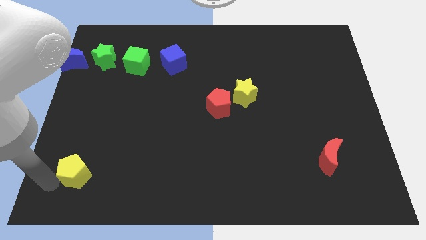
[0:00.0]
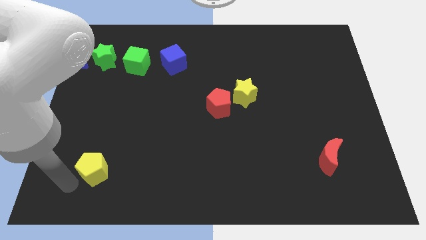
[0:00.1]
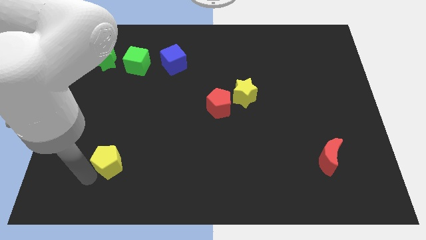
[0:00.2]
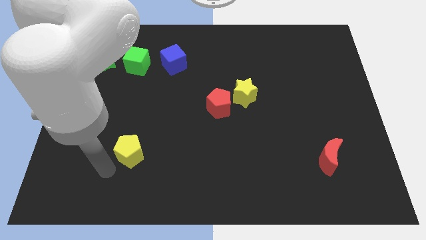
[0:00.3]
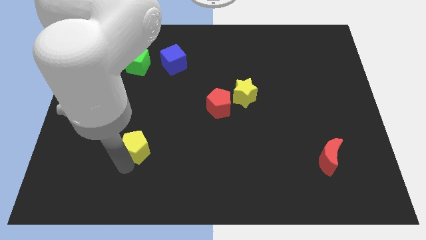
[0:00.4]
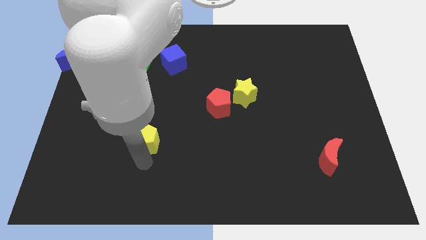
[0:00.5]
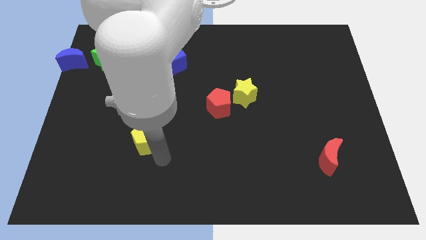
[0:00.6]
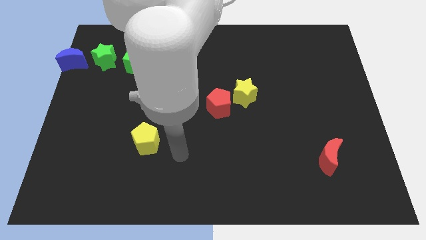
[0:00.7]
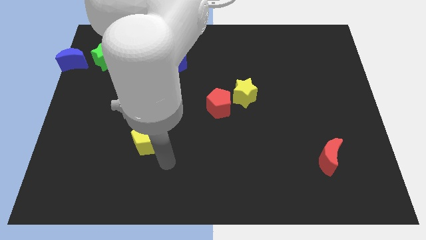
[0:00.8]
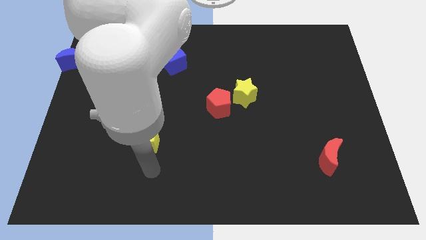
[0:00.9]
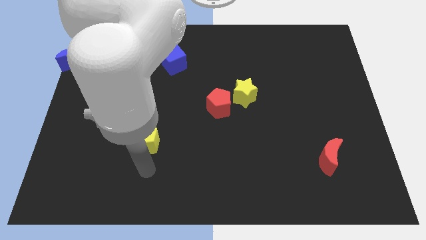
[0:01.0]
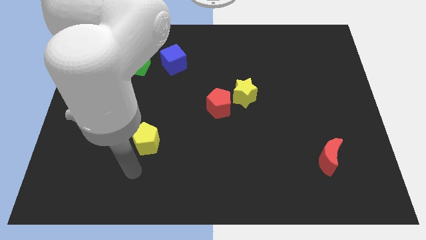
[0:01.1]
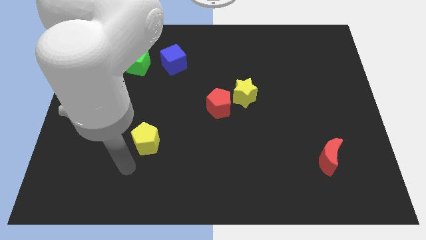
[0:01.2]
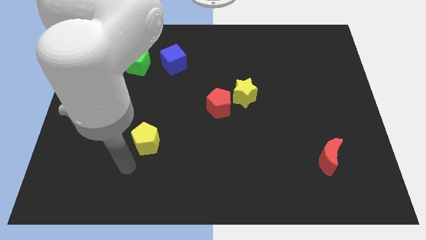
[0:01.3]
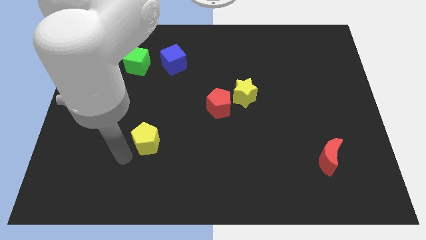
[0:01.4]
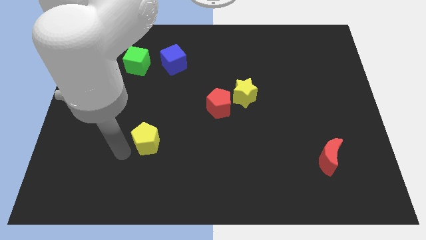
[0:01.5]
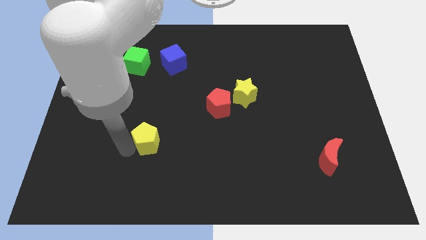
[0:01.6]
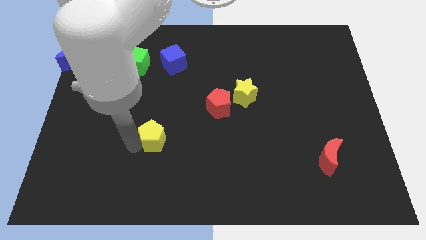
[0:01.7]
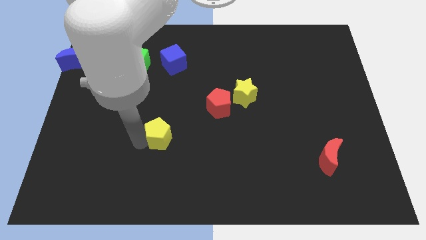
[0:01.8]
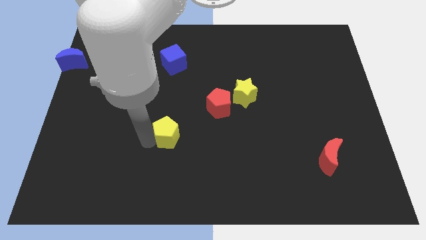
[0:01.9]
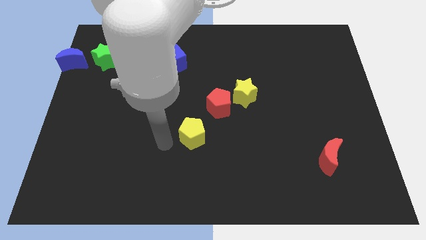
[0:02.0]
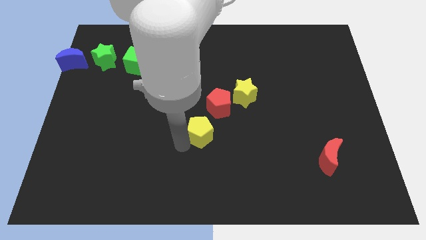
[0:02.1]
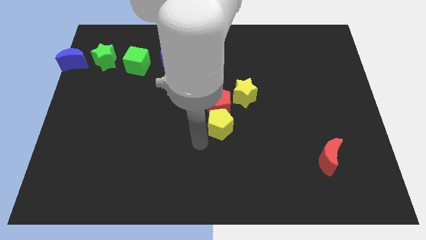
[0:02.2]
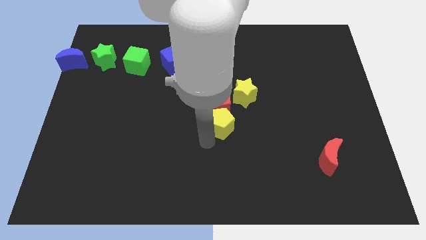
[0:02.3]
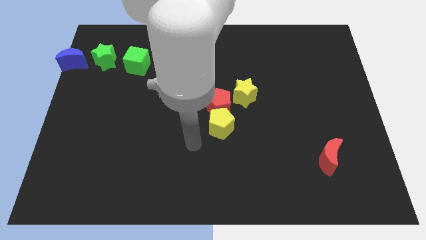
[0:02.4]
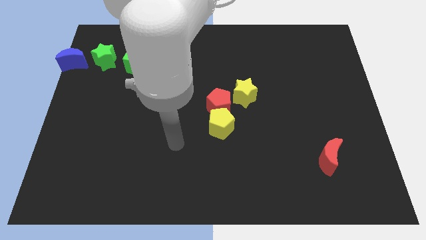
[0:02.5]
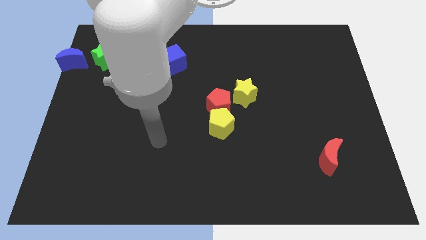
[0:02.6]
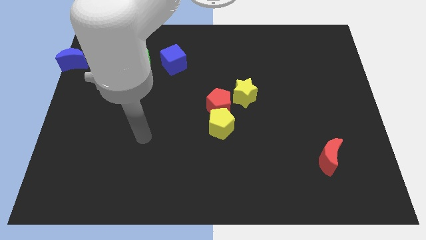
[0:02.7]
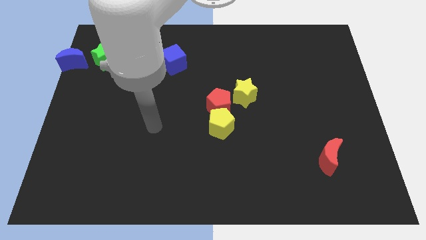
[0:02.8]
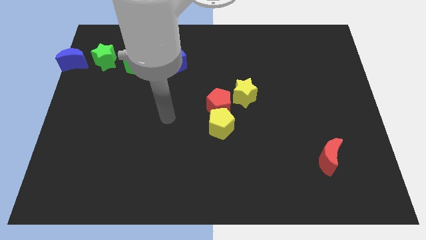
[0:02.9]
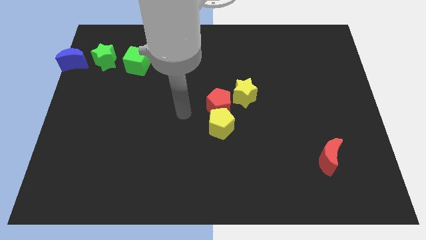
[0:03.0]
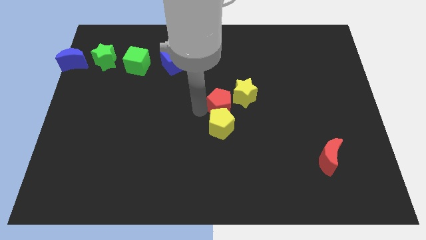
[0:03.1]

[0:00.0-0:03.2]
place the yellow pentagon close to the red pentagon

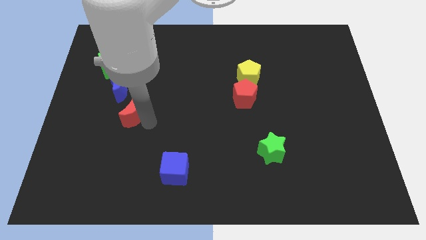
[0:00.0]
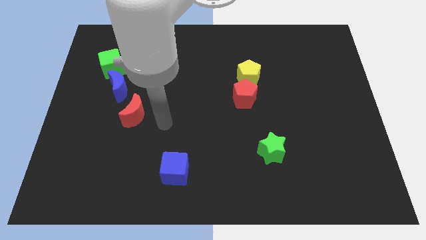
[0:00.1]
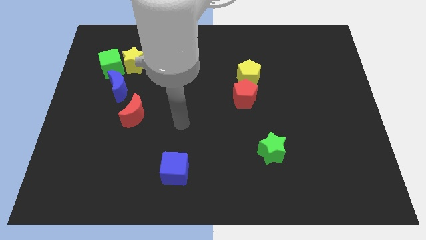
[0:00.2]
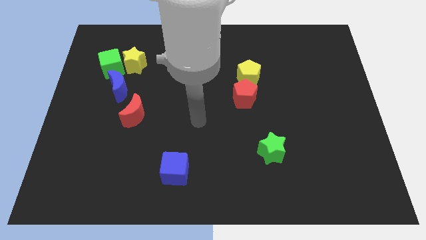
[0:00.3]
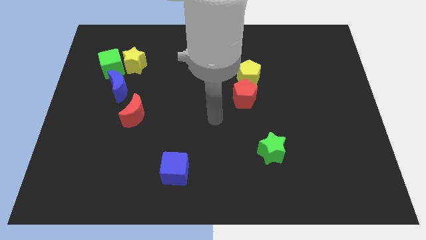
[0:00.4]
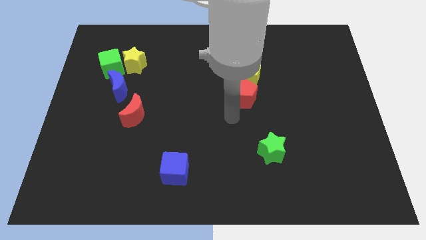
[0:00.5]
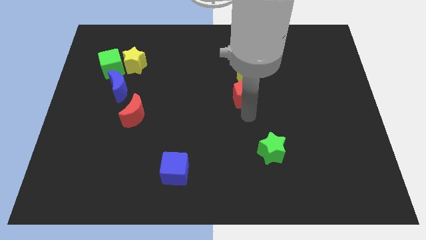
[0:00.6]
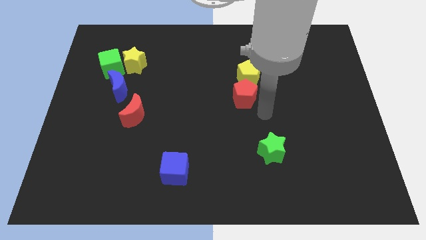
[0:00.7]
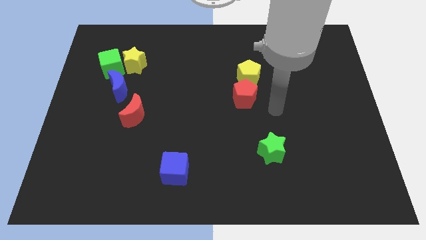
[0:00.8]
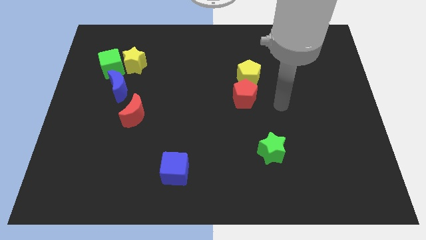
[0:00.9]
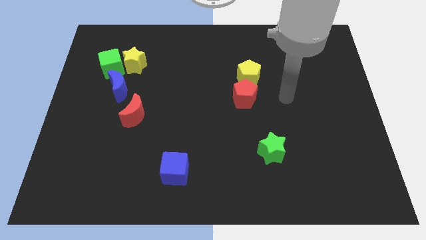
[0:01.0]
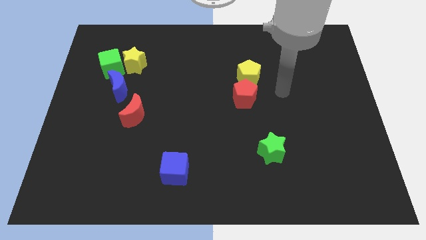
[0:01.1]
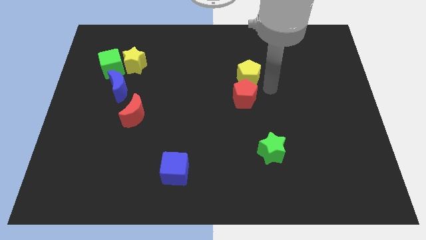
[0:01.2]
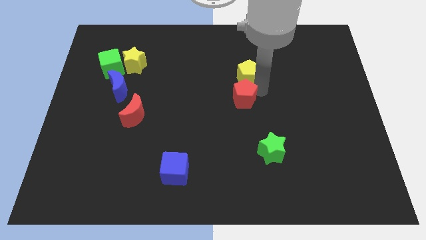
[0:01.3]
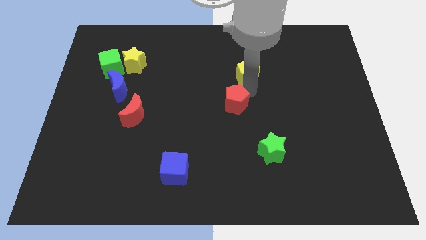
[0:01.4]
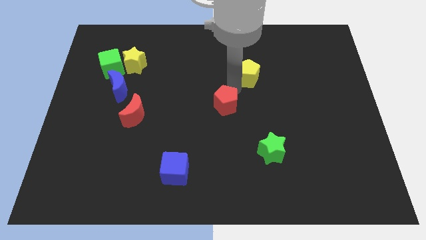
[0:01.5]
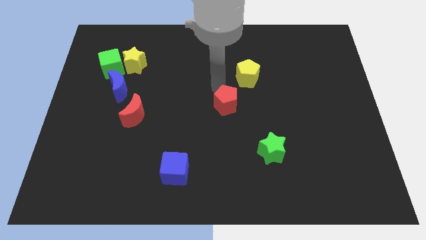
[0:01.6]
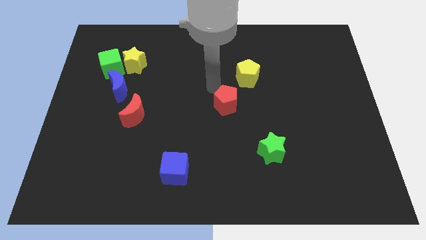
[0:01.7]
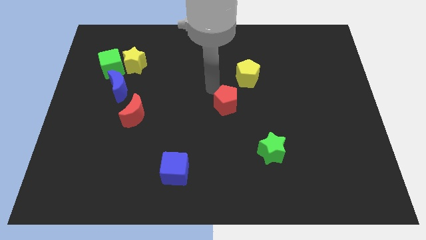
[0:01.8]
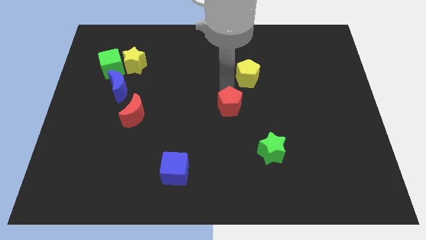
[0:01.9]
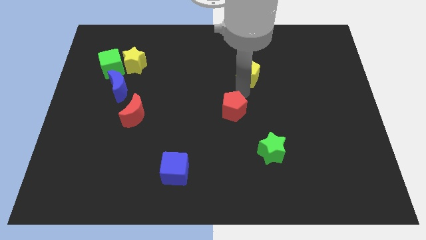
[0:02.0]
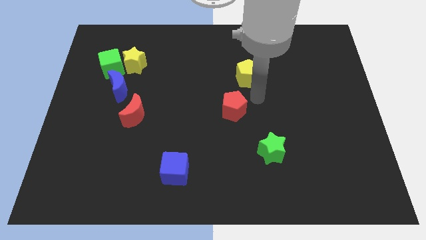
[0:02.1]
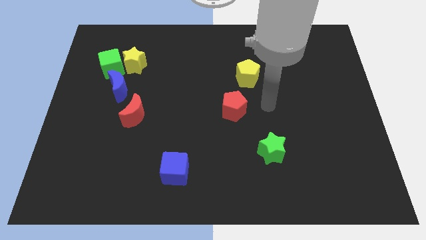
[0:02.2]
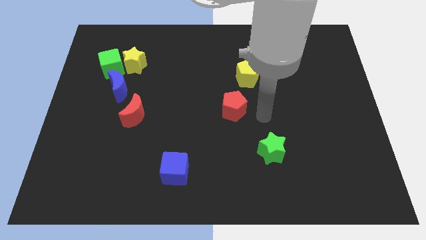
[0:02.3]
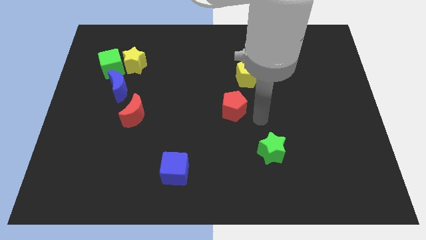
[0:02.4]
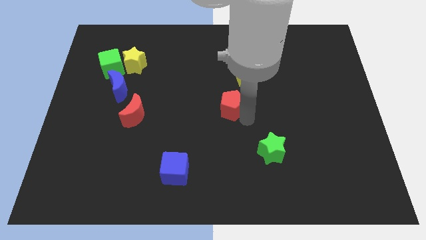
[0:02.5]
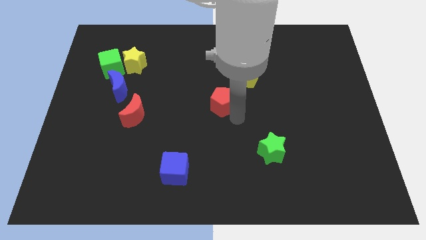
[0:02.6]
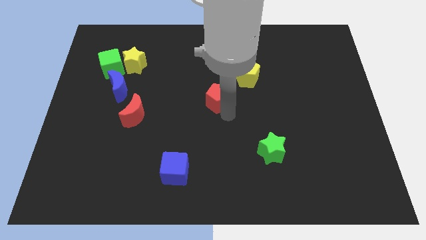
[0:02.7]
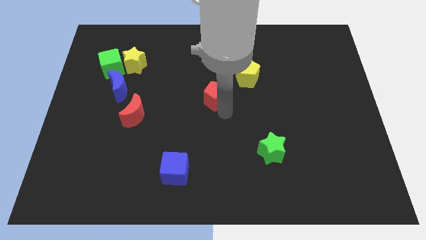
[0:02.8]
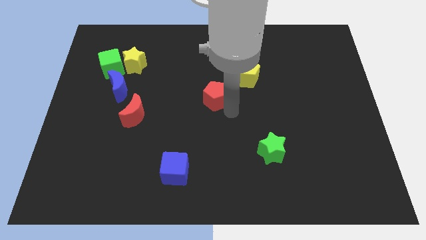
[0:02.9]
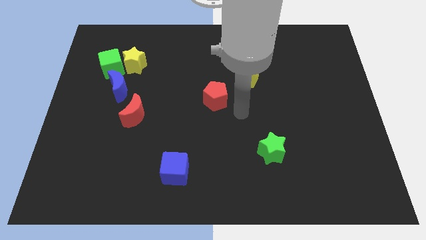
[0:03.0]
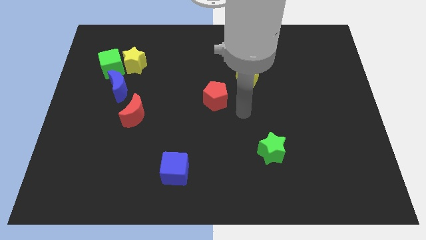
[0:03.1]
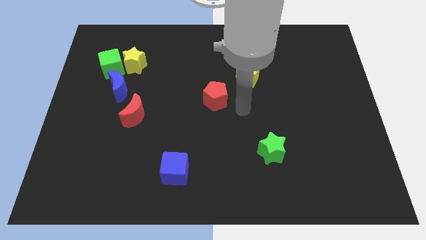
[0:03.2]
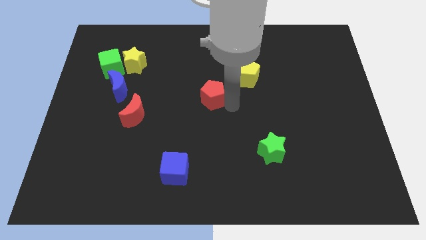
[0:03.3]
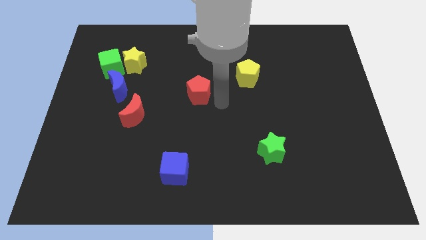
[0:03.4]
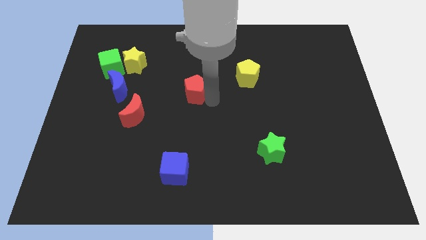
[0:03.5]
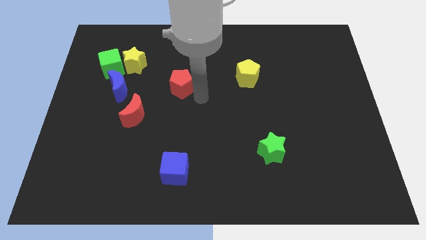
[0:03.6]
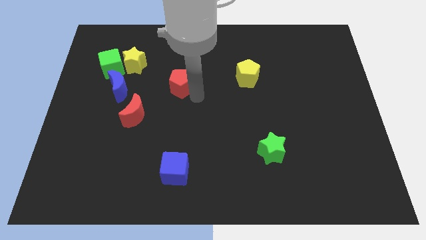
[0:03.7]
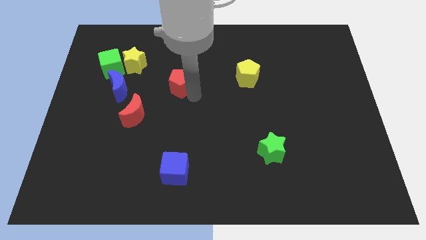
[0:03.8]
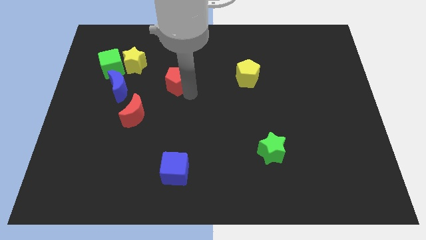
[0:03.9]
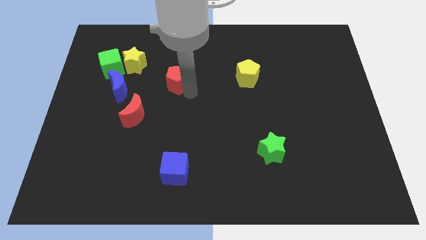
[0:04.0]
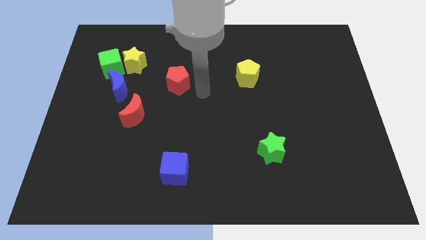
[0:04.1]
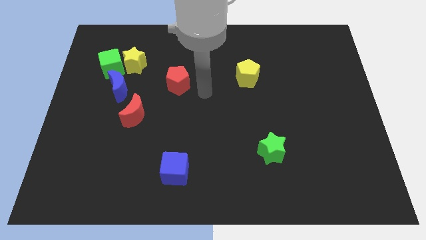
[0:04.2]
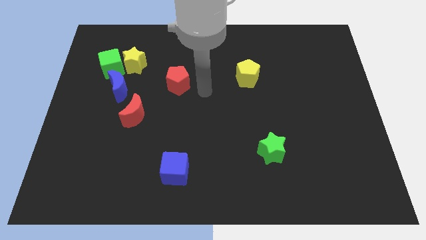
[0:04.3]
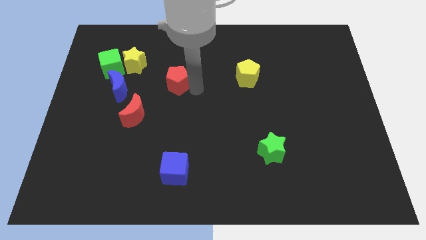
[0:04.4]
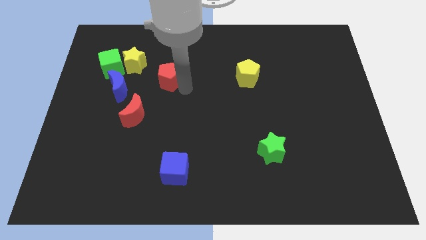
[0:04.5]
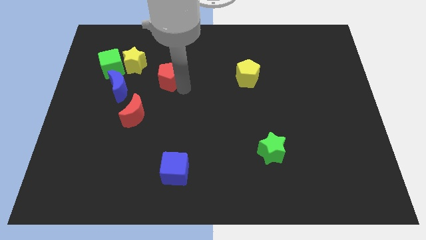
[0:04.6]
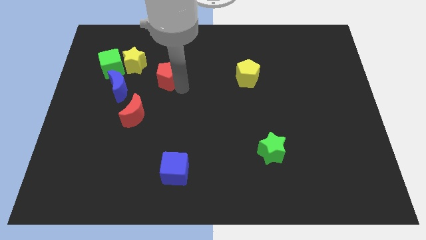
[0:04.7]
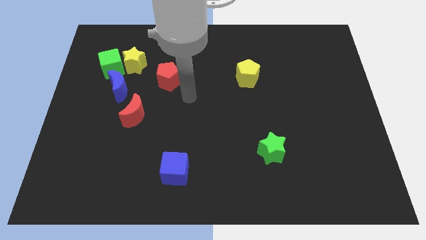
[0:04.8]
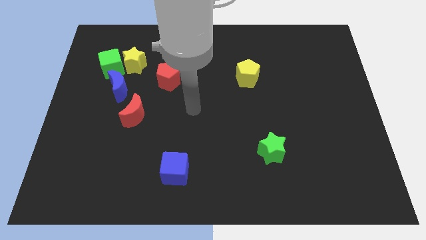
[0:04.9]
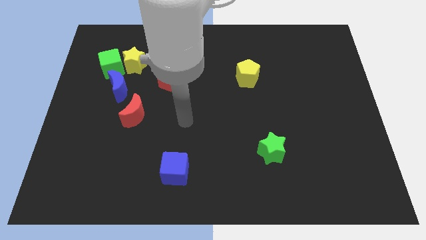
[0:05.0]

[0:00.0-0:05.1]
push red pentagon upwards

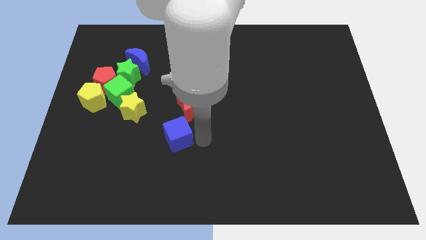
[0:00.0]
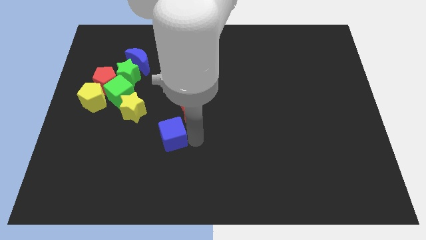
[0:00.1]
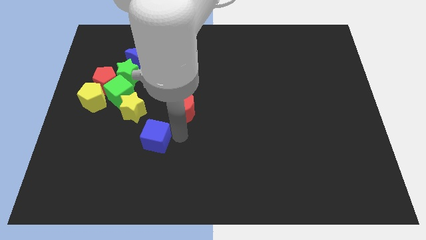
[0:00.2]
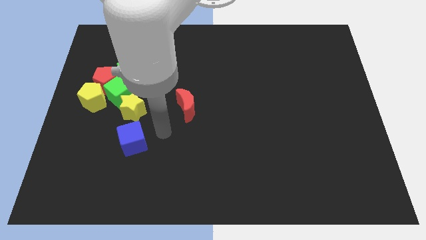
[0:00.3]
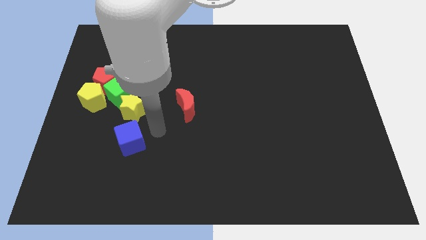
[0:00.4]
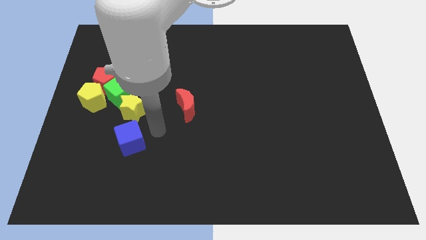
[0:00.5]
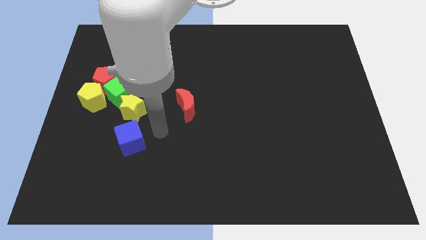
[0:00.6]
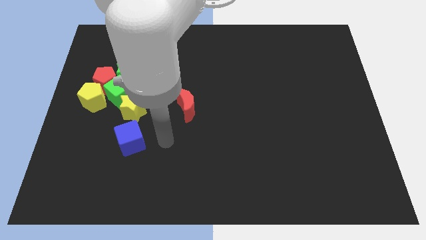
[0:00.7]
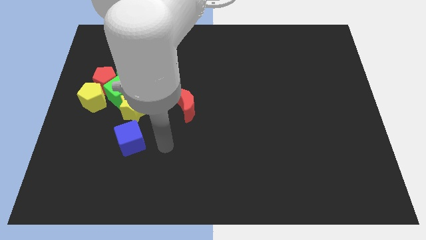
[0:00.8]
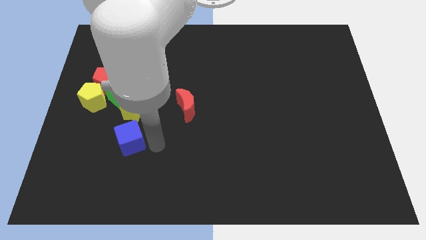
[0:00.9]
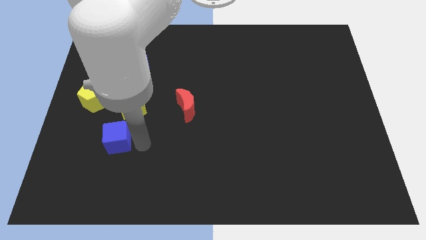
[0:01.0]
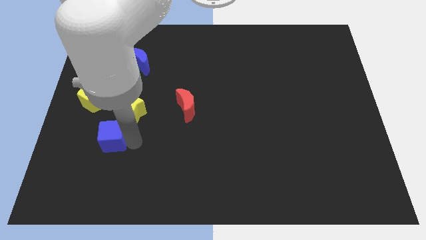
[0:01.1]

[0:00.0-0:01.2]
place the blue cube below the yellow star
